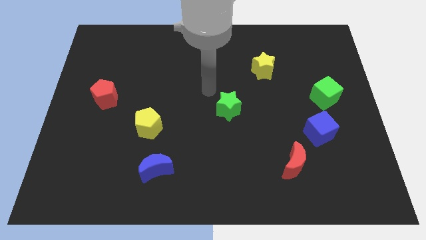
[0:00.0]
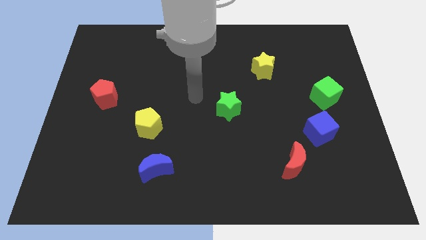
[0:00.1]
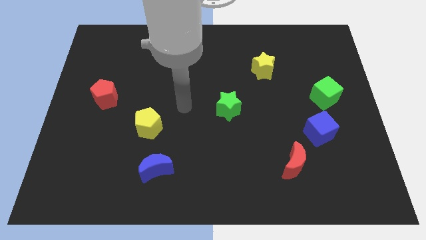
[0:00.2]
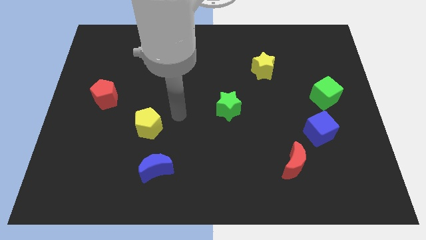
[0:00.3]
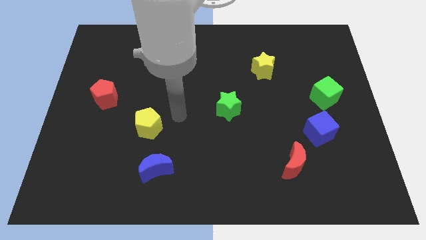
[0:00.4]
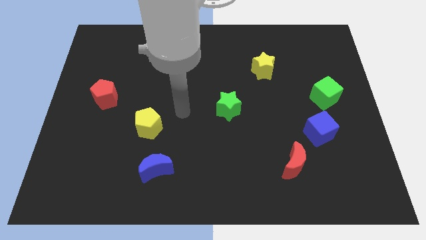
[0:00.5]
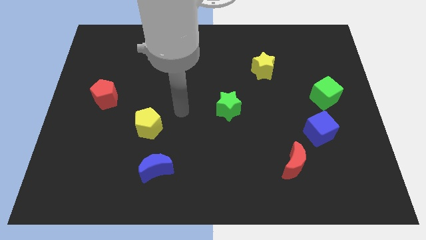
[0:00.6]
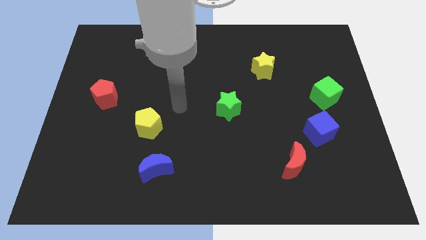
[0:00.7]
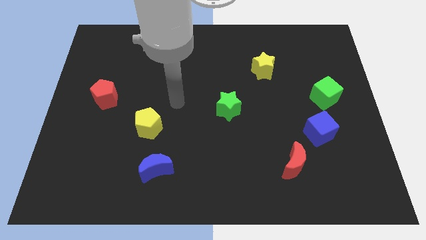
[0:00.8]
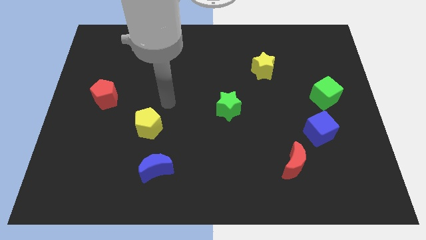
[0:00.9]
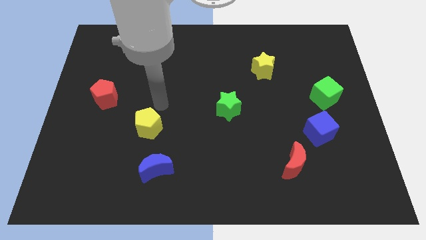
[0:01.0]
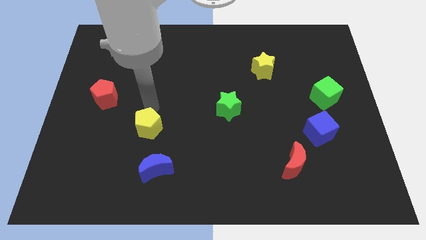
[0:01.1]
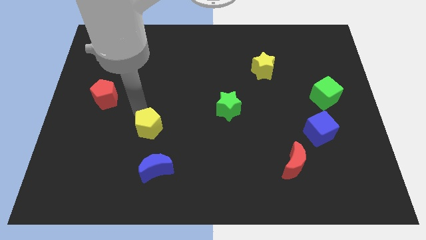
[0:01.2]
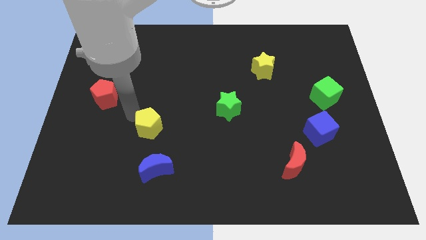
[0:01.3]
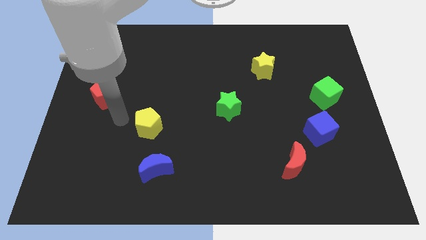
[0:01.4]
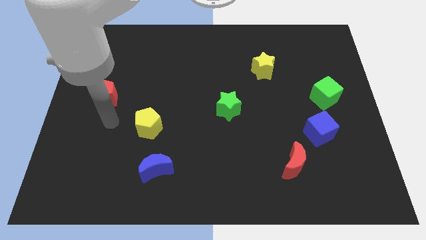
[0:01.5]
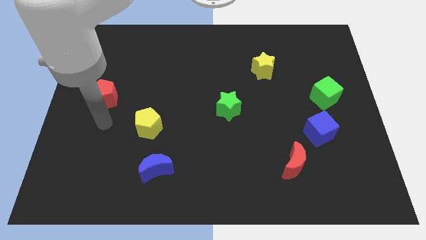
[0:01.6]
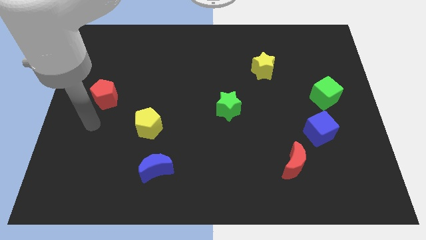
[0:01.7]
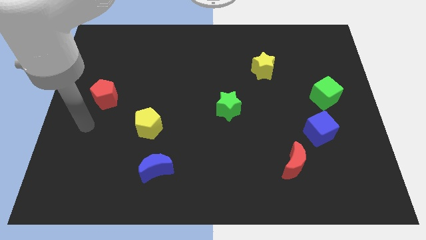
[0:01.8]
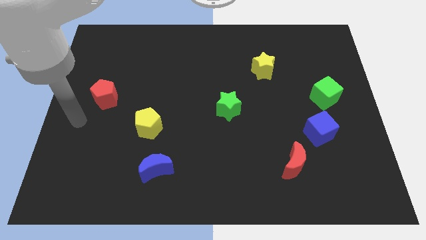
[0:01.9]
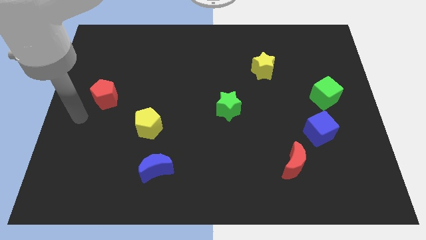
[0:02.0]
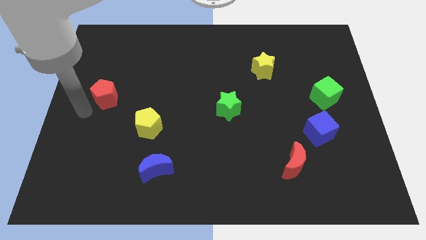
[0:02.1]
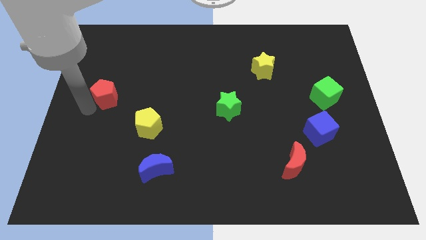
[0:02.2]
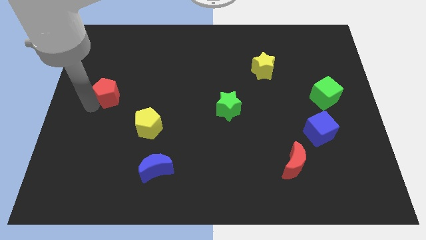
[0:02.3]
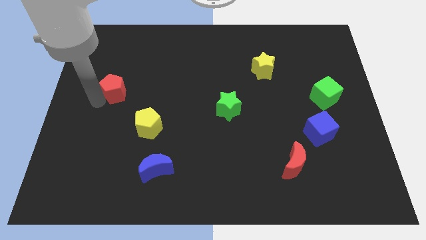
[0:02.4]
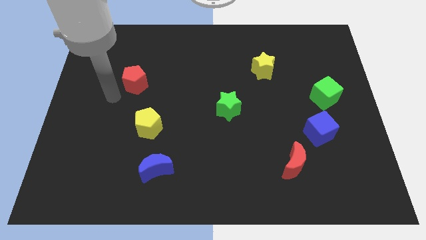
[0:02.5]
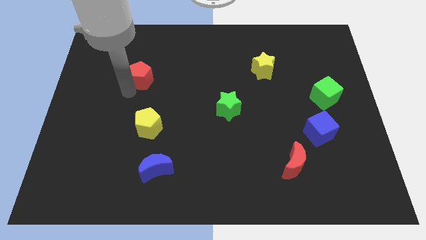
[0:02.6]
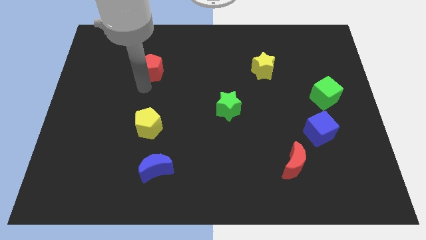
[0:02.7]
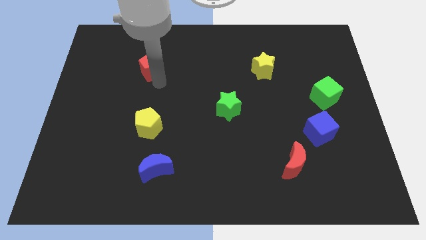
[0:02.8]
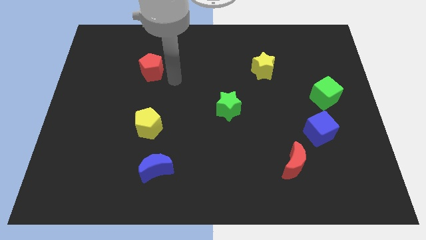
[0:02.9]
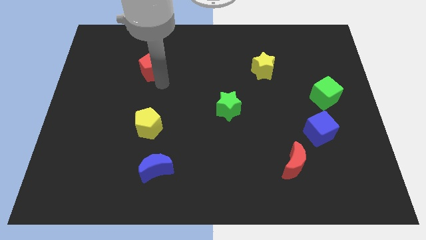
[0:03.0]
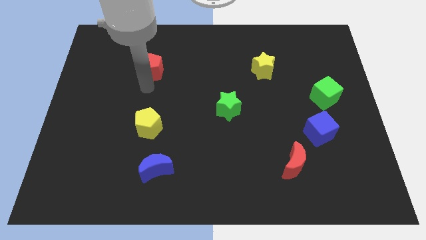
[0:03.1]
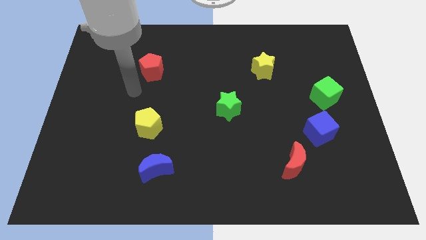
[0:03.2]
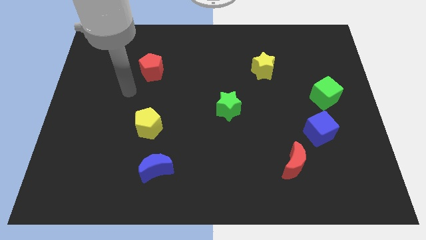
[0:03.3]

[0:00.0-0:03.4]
put the red pentagon and yellow pentagon in a line vertically

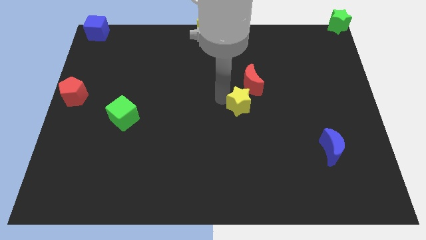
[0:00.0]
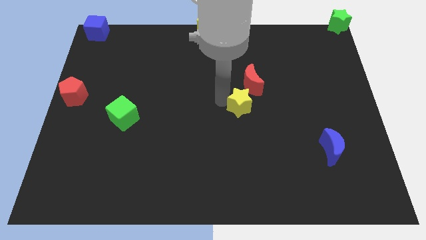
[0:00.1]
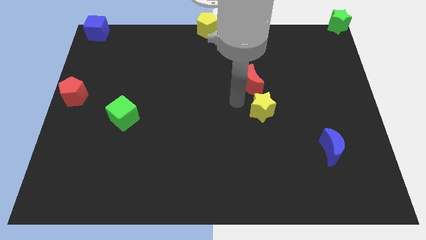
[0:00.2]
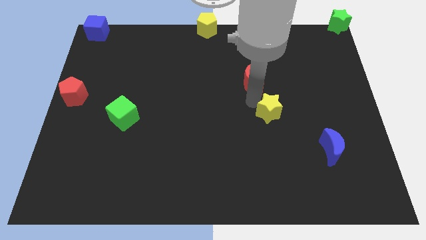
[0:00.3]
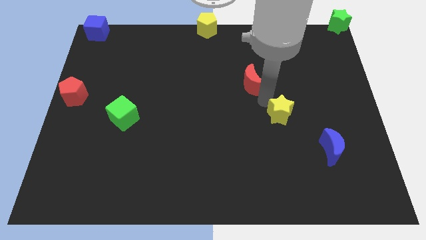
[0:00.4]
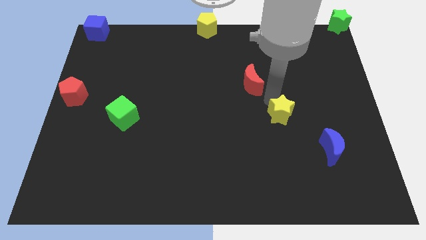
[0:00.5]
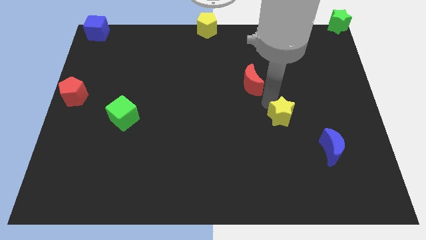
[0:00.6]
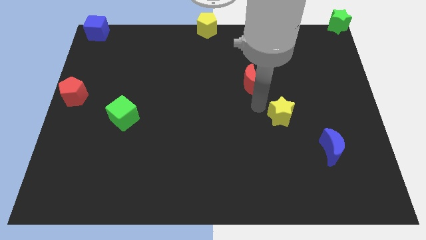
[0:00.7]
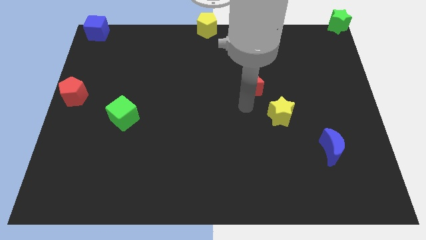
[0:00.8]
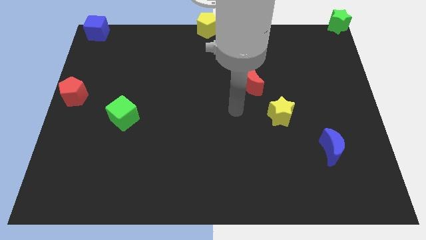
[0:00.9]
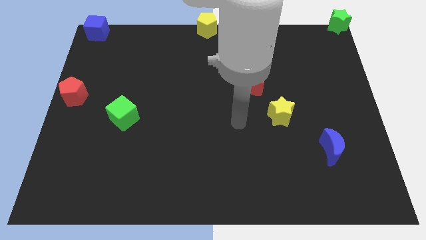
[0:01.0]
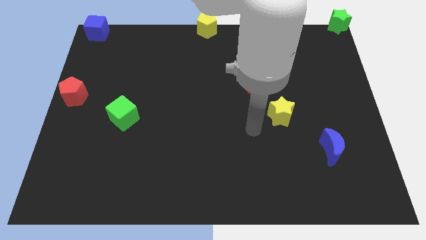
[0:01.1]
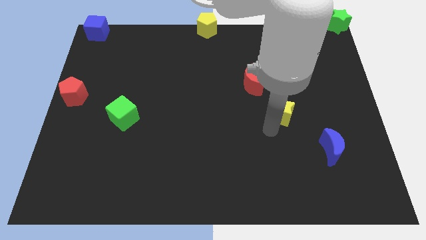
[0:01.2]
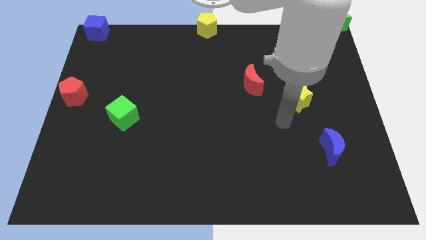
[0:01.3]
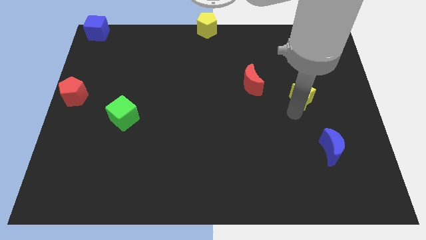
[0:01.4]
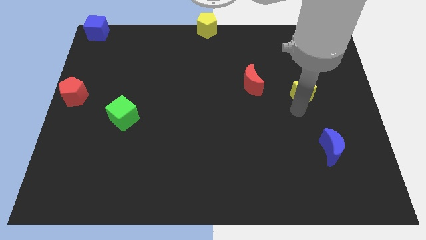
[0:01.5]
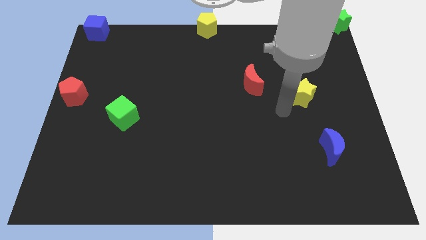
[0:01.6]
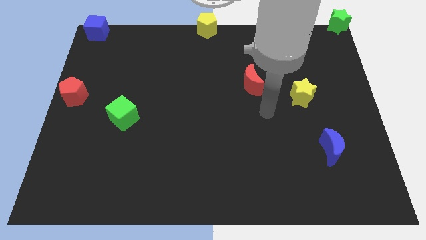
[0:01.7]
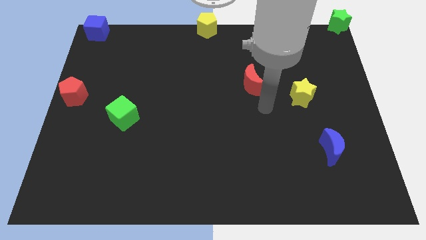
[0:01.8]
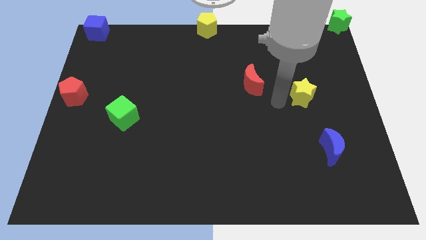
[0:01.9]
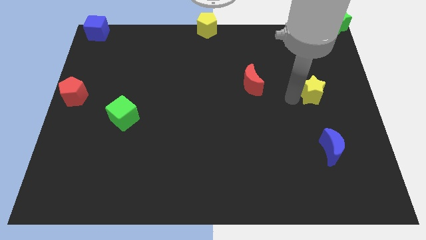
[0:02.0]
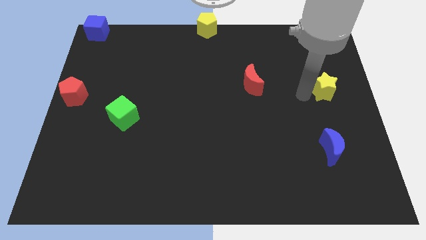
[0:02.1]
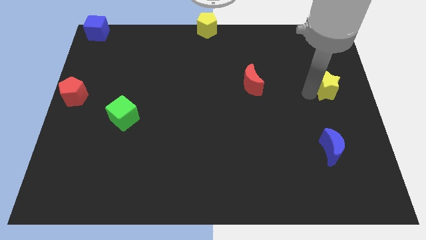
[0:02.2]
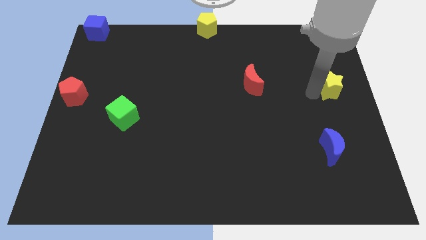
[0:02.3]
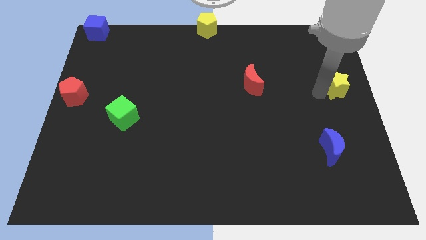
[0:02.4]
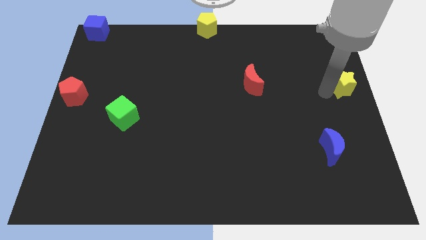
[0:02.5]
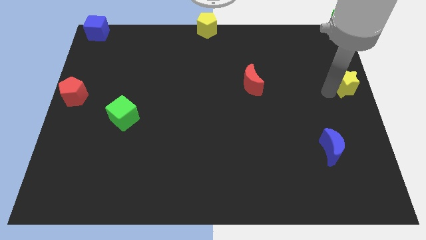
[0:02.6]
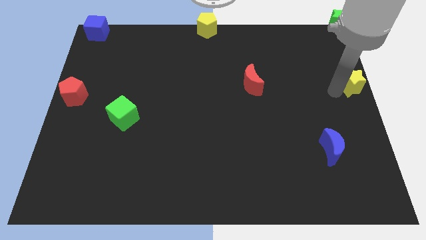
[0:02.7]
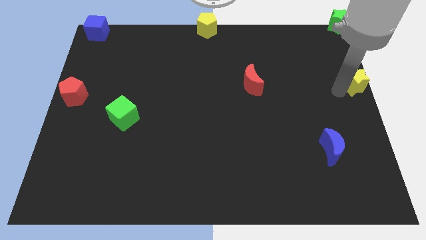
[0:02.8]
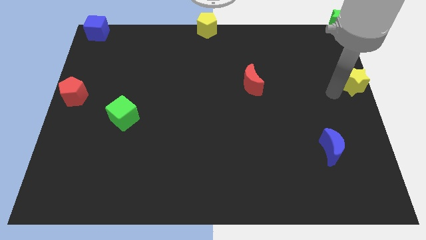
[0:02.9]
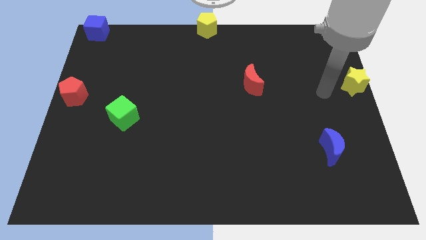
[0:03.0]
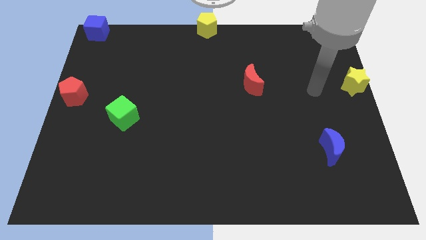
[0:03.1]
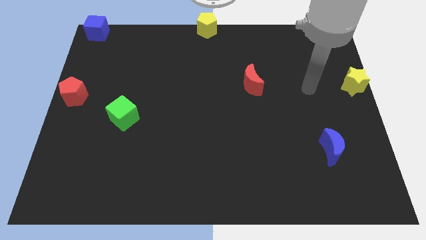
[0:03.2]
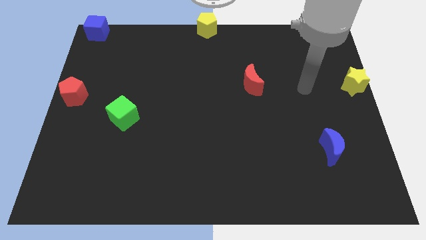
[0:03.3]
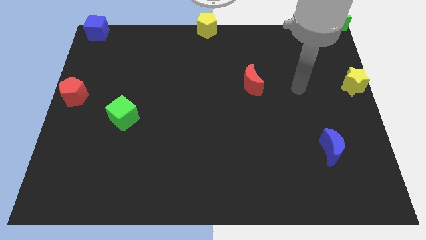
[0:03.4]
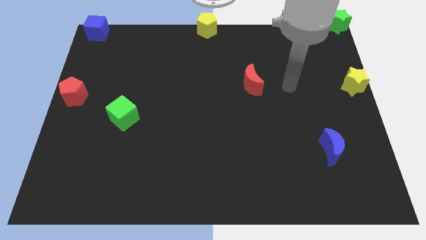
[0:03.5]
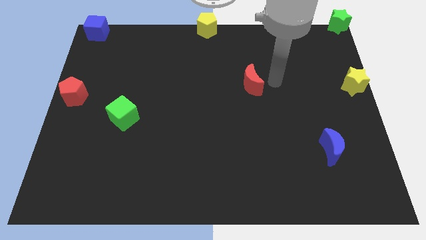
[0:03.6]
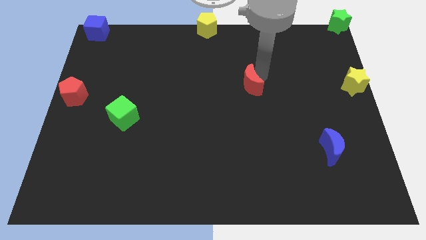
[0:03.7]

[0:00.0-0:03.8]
place the yellow star to the centre right of the board

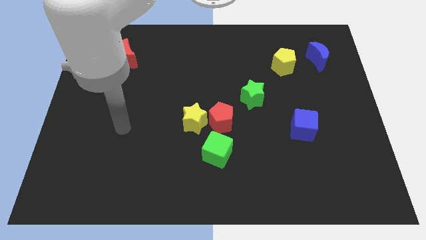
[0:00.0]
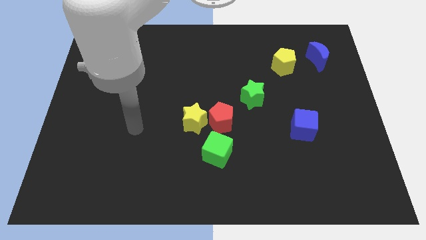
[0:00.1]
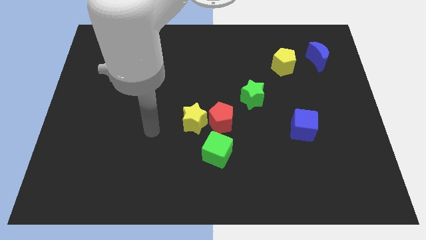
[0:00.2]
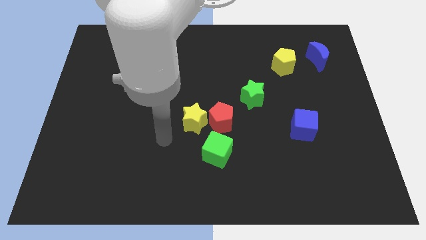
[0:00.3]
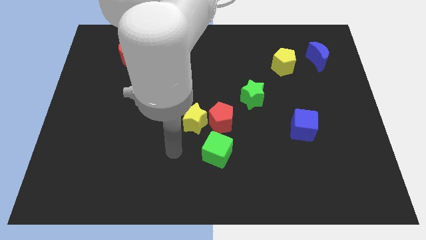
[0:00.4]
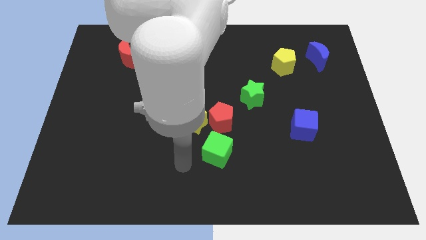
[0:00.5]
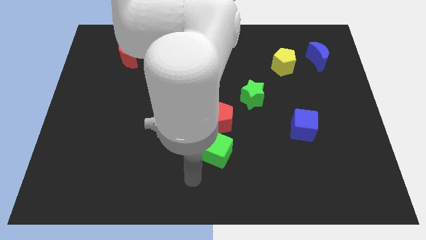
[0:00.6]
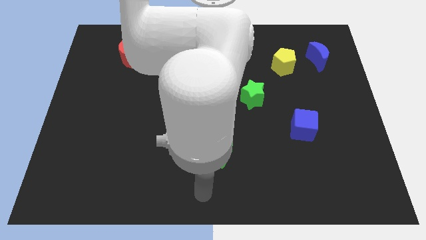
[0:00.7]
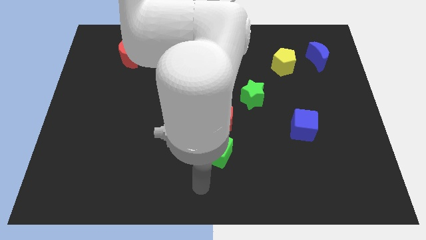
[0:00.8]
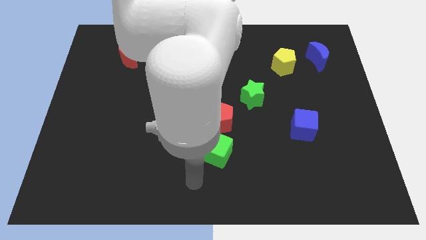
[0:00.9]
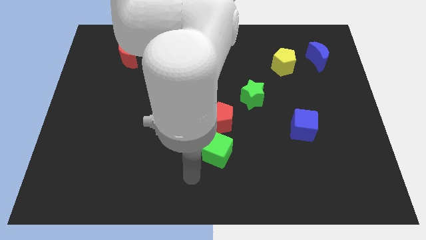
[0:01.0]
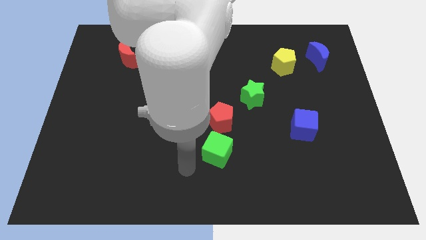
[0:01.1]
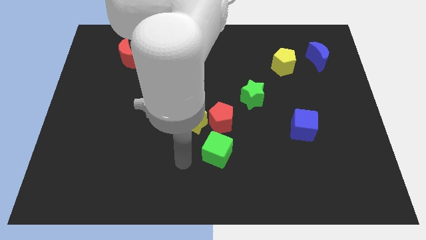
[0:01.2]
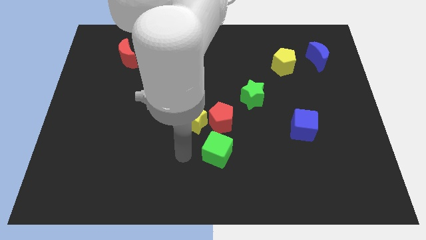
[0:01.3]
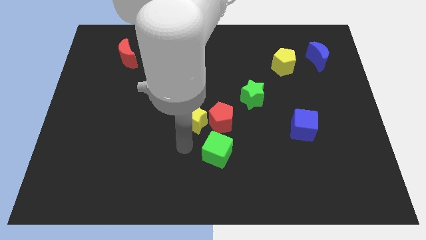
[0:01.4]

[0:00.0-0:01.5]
place your arm to the bottom of yellow star
